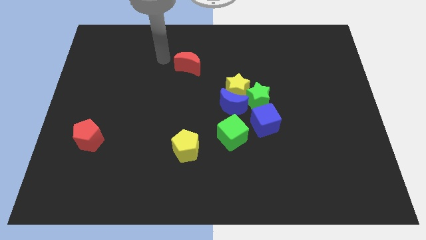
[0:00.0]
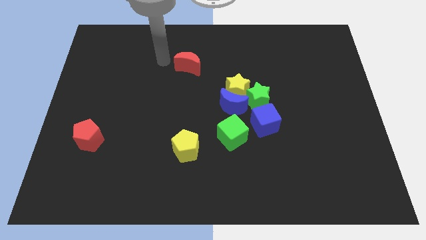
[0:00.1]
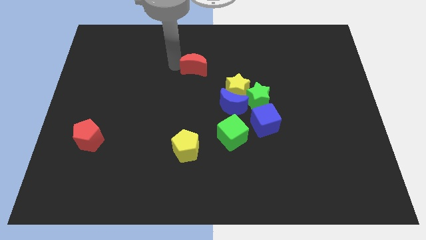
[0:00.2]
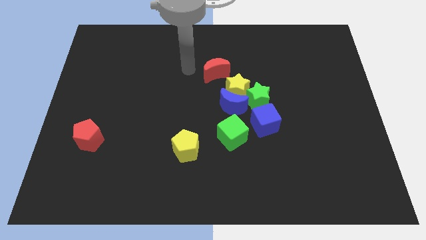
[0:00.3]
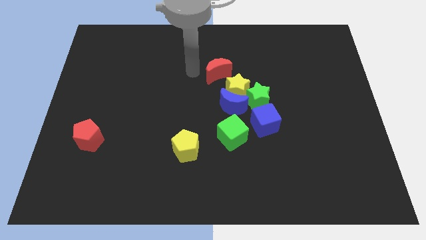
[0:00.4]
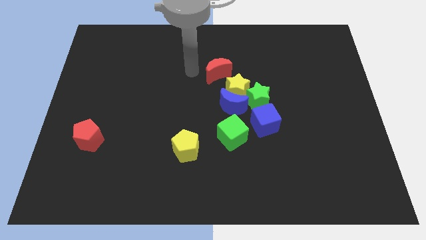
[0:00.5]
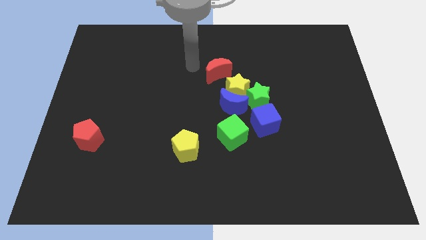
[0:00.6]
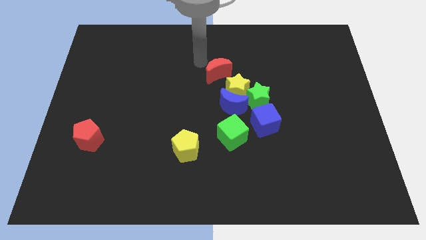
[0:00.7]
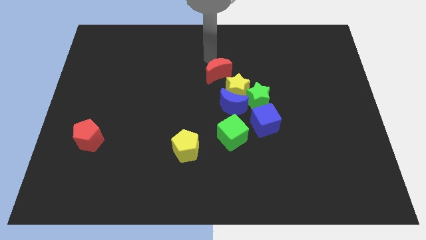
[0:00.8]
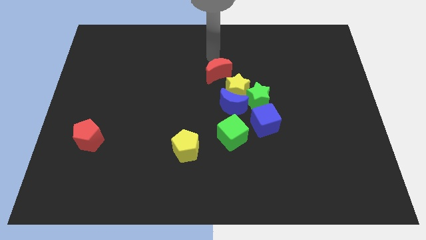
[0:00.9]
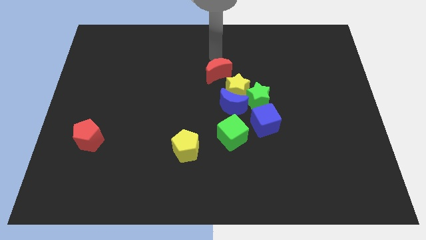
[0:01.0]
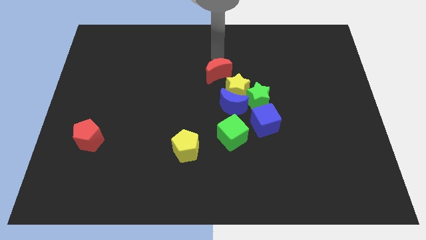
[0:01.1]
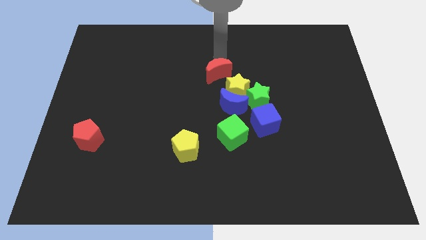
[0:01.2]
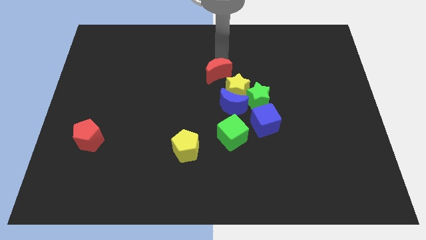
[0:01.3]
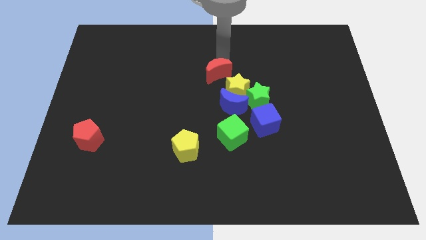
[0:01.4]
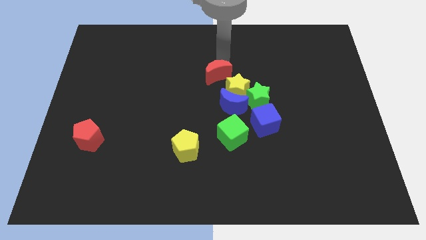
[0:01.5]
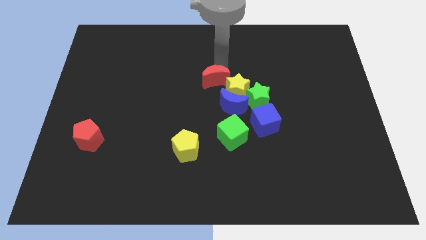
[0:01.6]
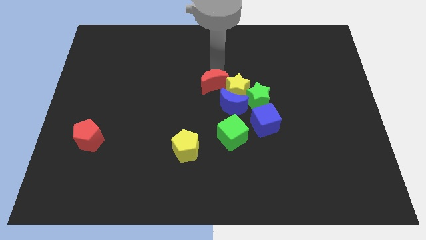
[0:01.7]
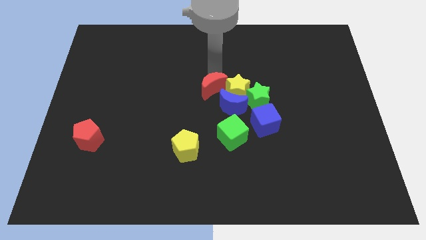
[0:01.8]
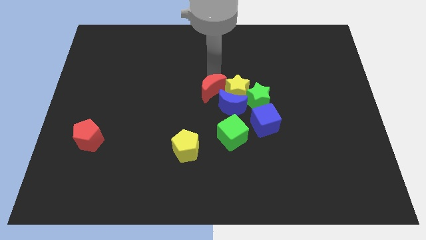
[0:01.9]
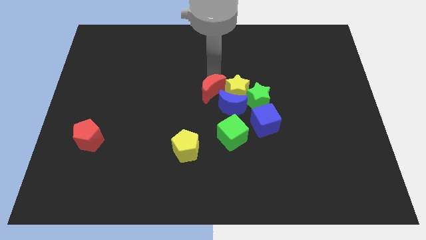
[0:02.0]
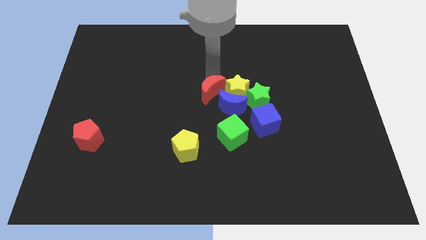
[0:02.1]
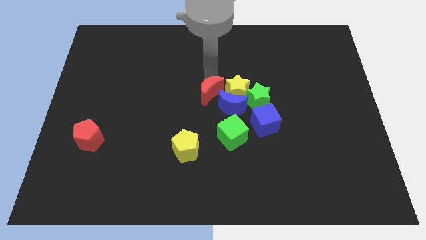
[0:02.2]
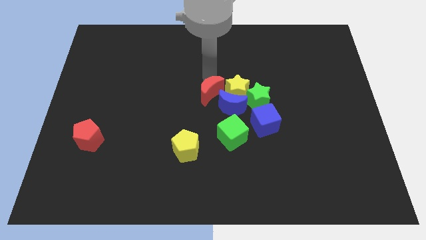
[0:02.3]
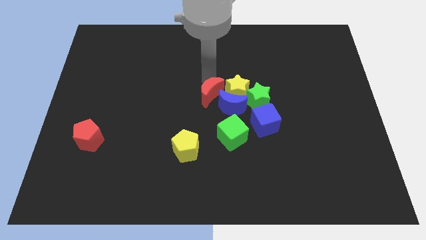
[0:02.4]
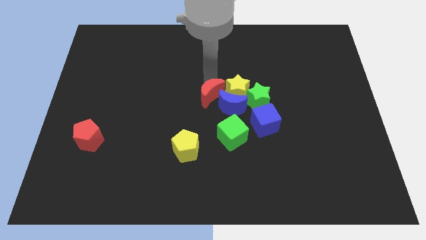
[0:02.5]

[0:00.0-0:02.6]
move the red crescent to the left of the yellow star

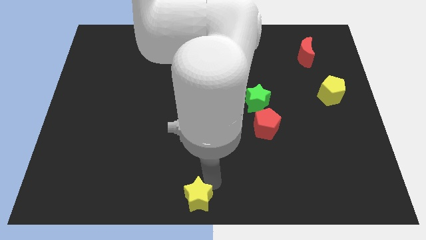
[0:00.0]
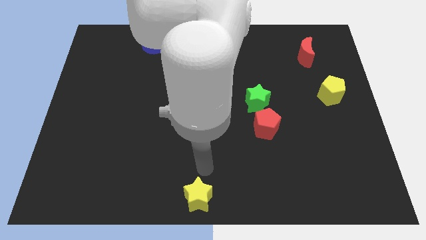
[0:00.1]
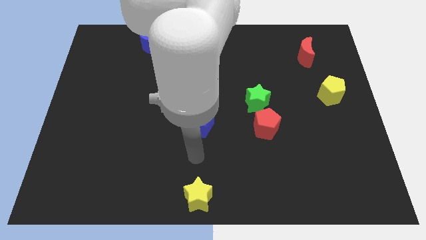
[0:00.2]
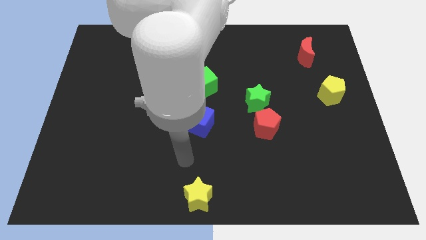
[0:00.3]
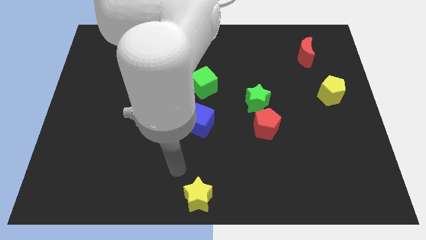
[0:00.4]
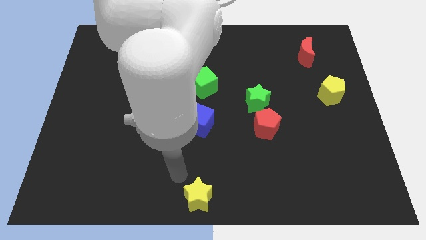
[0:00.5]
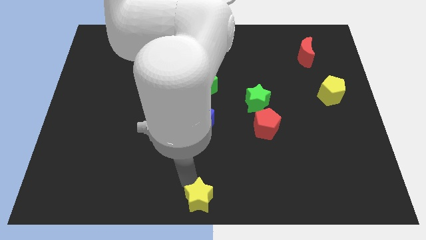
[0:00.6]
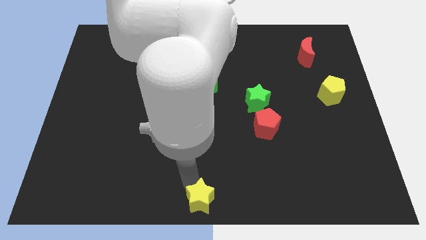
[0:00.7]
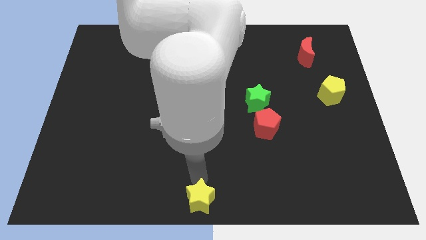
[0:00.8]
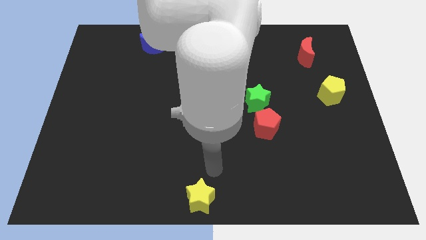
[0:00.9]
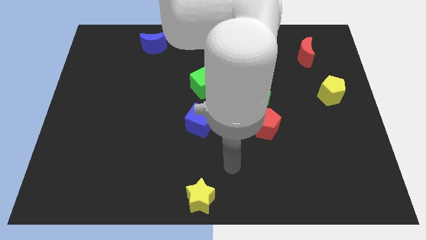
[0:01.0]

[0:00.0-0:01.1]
touch the yellow star

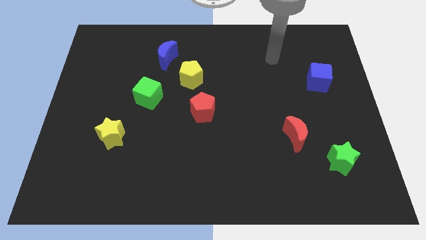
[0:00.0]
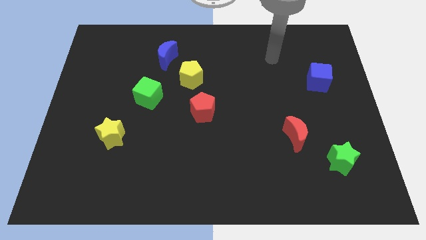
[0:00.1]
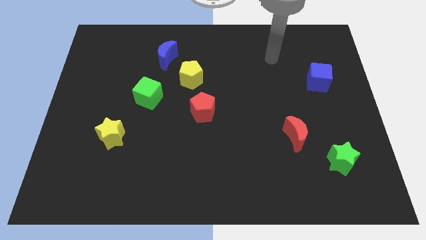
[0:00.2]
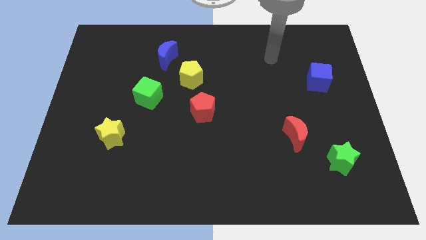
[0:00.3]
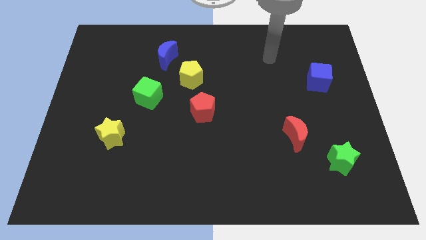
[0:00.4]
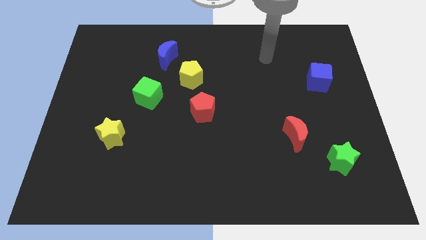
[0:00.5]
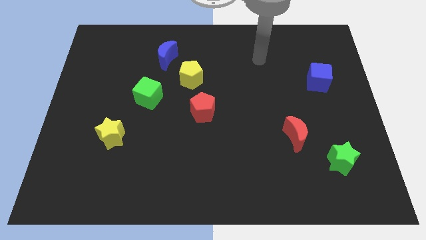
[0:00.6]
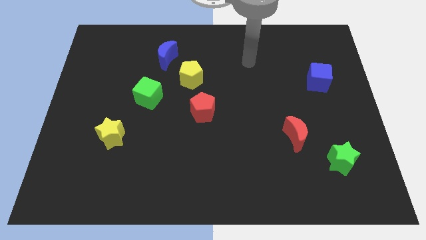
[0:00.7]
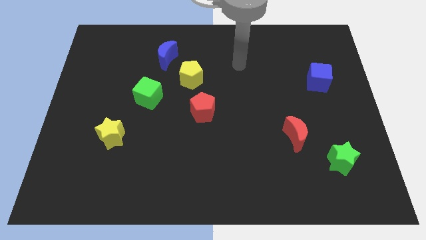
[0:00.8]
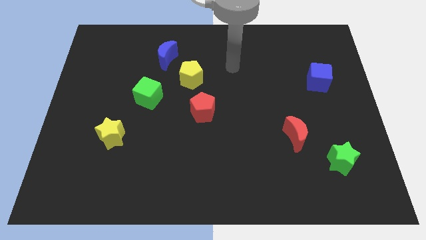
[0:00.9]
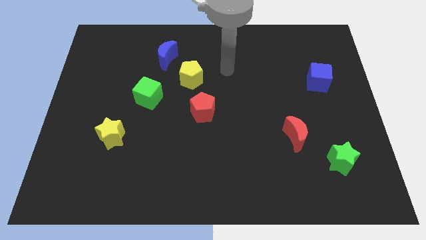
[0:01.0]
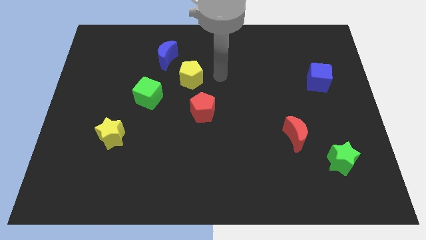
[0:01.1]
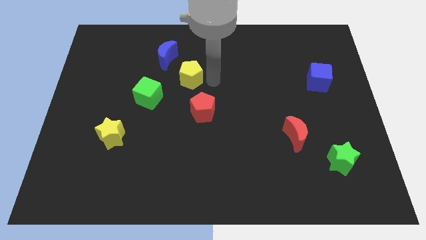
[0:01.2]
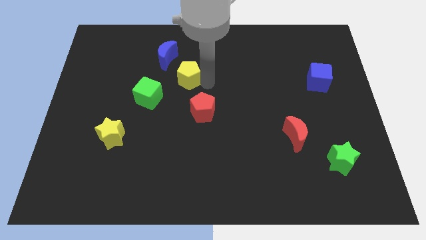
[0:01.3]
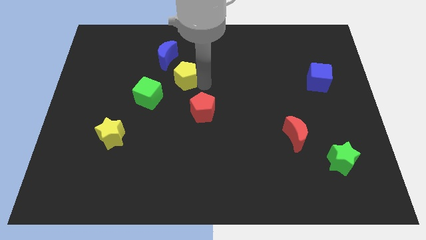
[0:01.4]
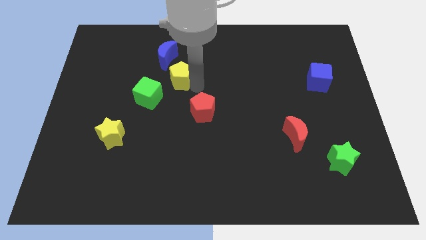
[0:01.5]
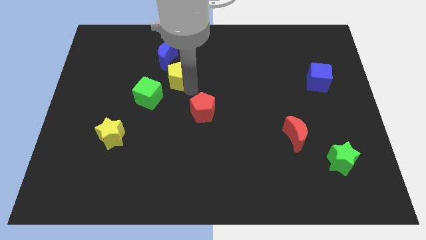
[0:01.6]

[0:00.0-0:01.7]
slightly push the yellow pentagon to the left of the board

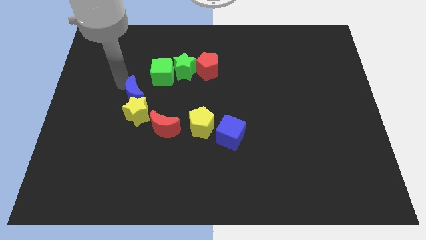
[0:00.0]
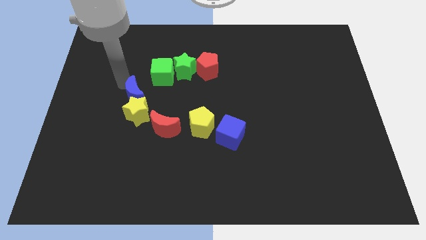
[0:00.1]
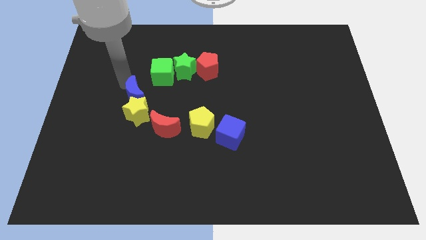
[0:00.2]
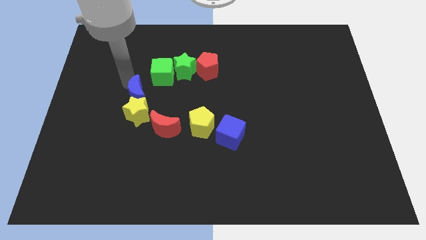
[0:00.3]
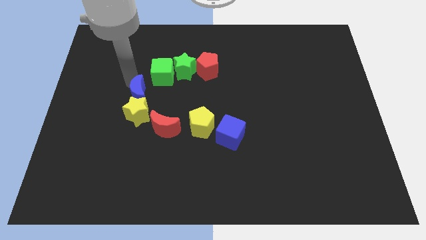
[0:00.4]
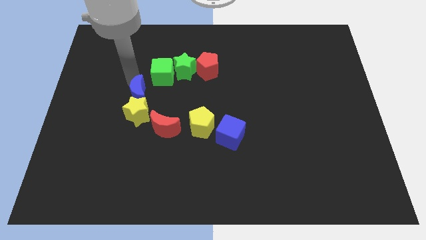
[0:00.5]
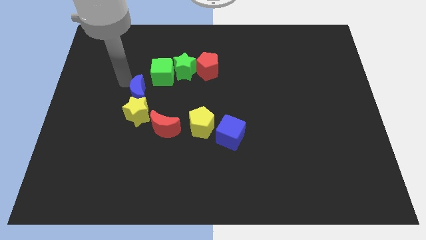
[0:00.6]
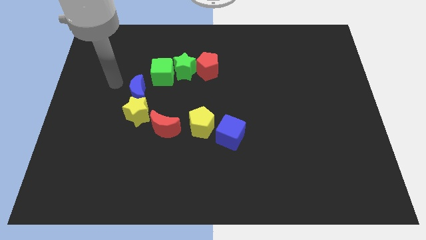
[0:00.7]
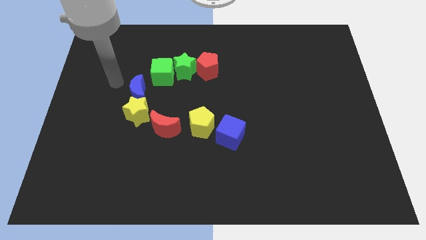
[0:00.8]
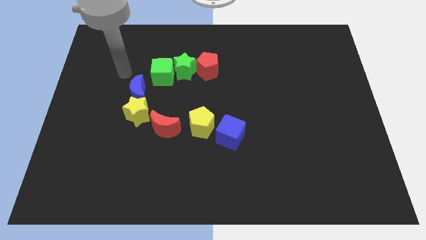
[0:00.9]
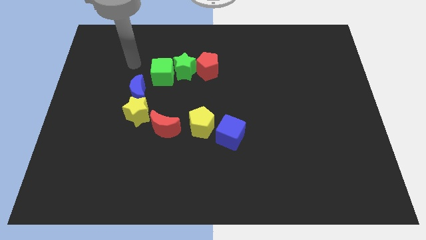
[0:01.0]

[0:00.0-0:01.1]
tap the blue crescent

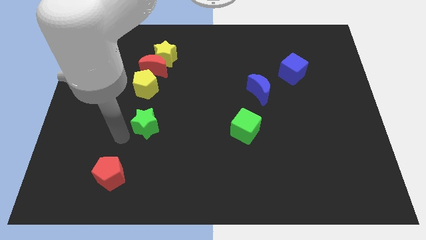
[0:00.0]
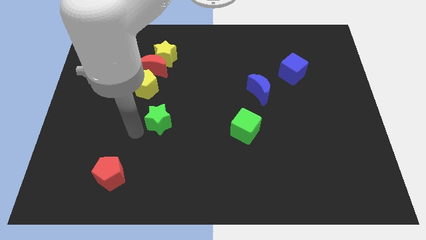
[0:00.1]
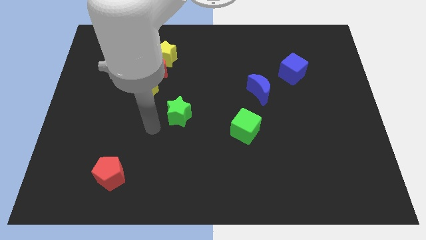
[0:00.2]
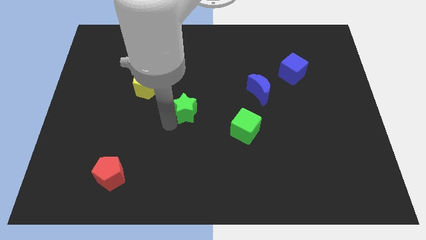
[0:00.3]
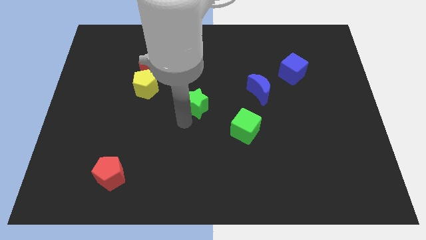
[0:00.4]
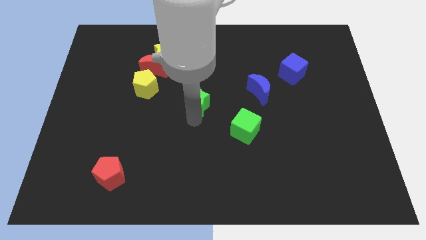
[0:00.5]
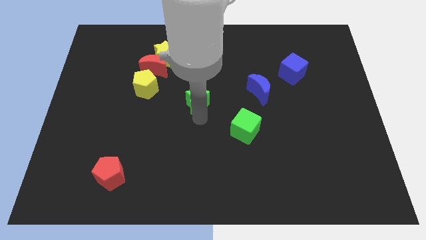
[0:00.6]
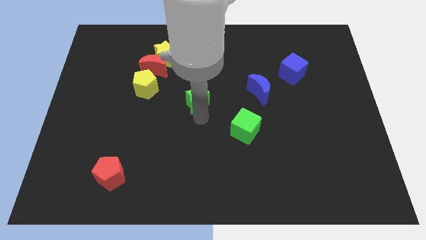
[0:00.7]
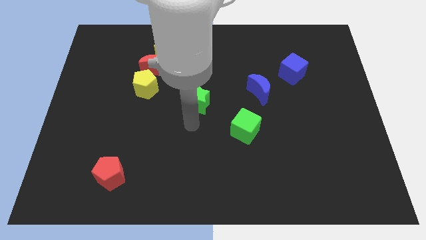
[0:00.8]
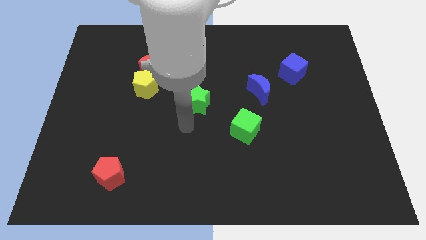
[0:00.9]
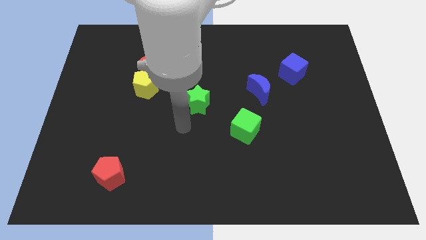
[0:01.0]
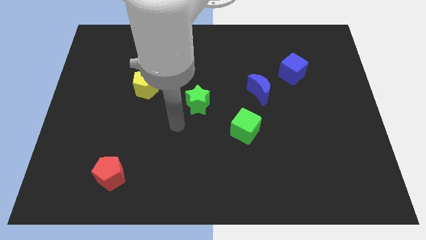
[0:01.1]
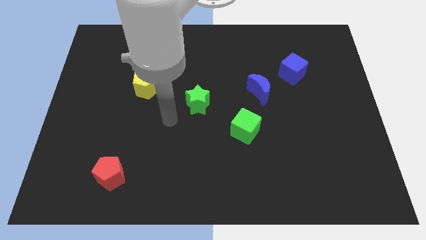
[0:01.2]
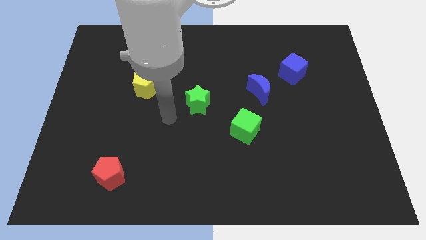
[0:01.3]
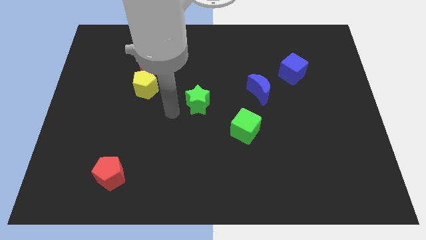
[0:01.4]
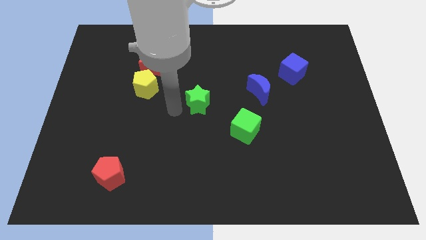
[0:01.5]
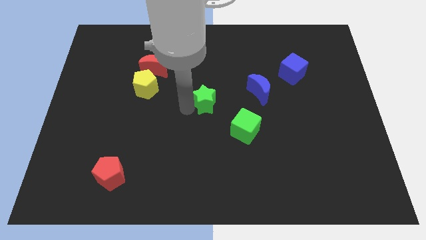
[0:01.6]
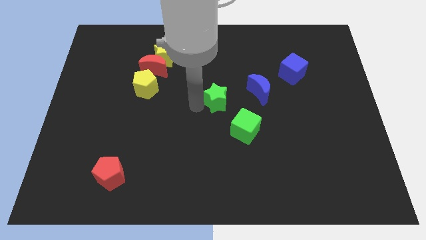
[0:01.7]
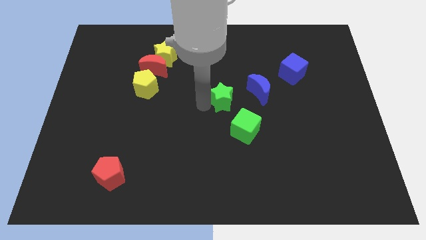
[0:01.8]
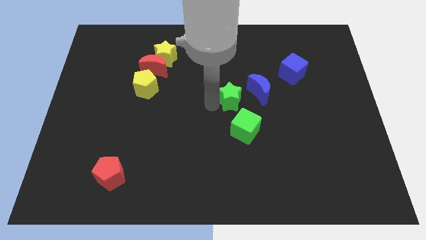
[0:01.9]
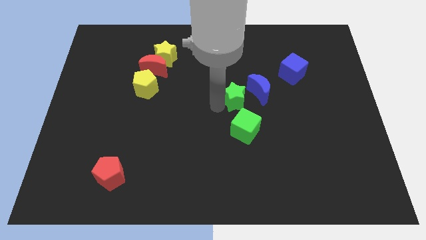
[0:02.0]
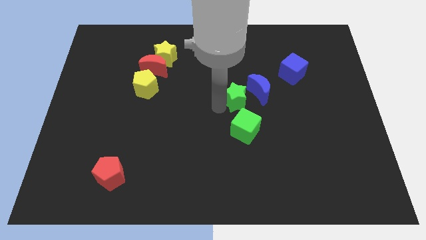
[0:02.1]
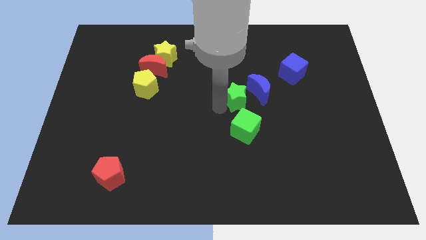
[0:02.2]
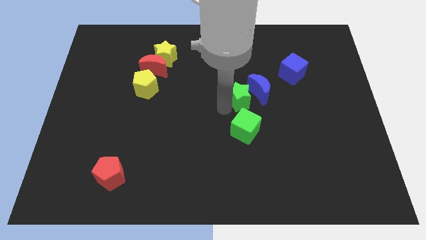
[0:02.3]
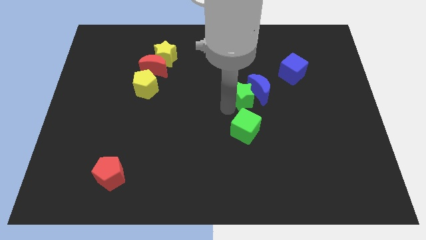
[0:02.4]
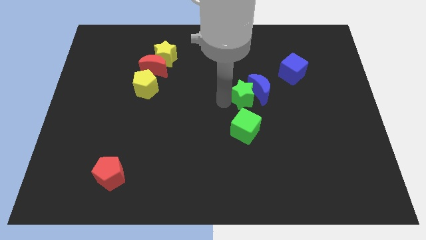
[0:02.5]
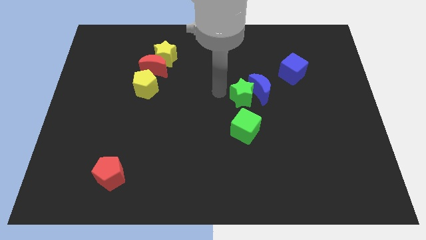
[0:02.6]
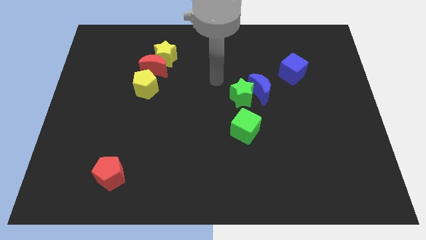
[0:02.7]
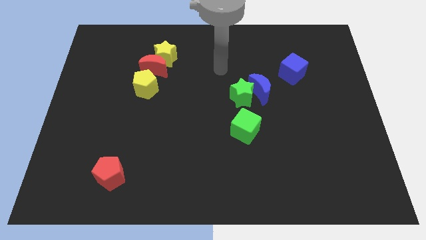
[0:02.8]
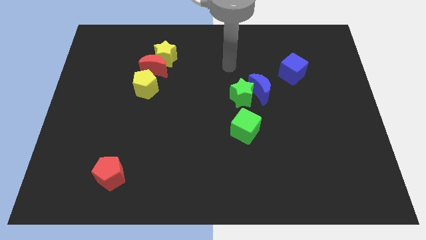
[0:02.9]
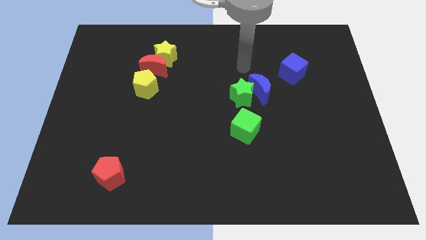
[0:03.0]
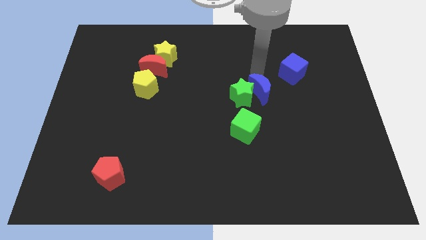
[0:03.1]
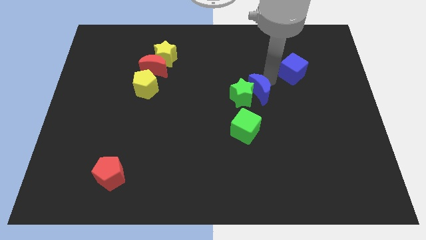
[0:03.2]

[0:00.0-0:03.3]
move the green star to the left of the blue crescent
